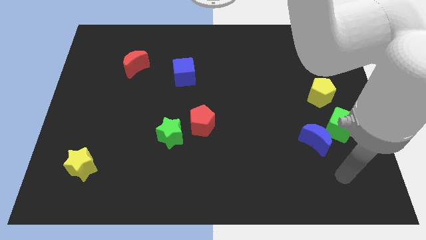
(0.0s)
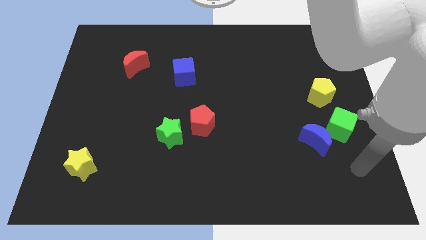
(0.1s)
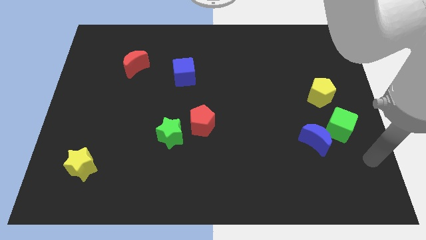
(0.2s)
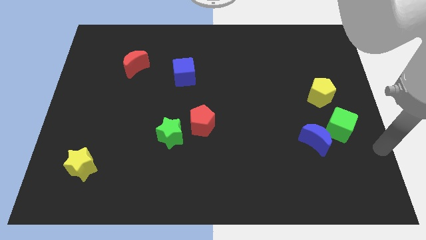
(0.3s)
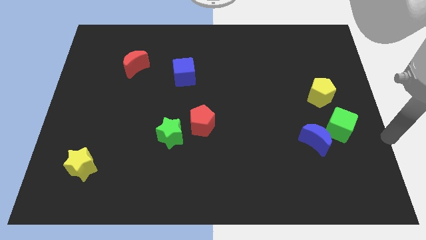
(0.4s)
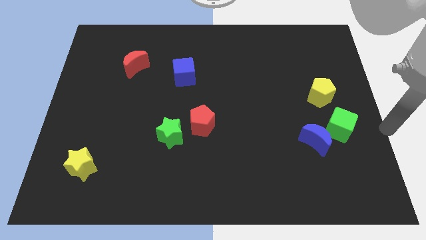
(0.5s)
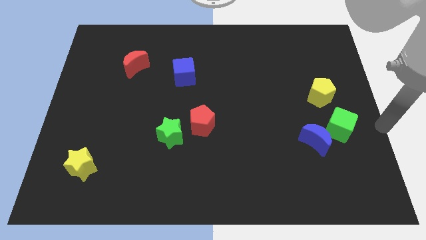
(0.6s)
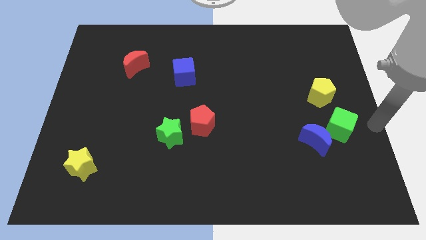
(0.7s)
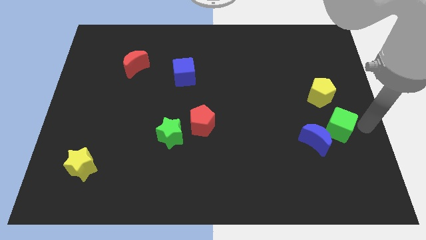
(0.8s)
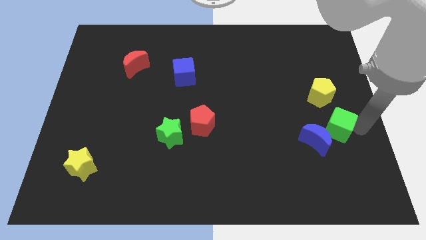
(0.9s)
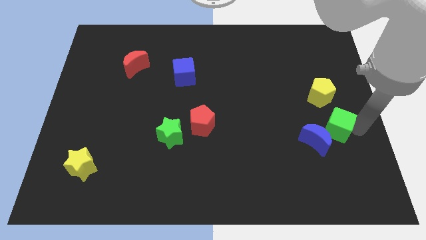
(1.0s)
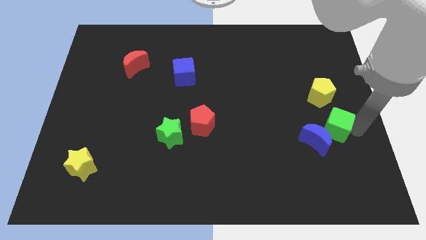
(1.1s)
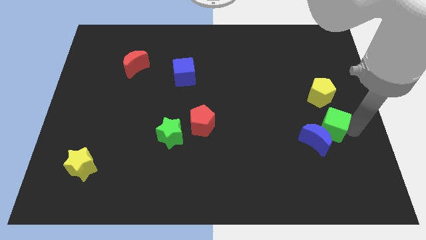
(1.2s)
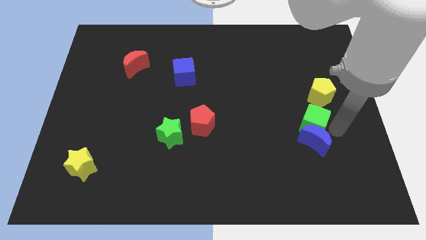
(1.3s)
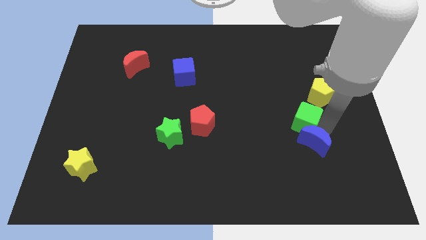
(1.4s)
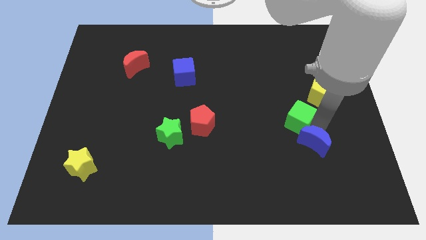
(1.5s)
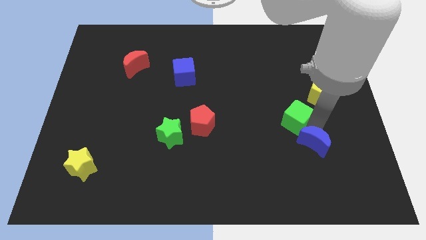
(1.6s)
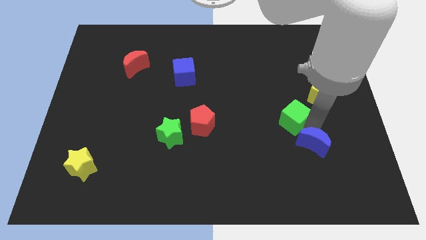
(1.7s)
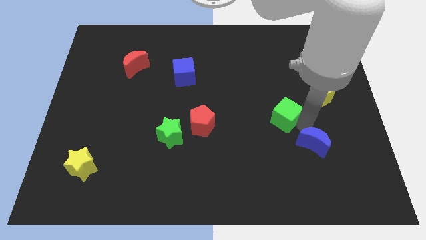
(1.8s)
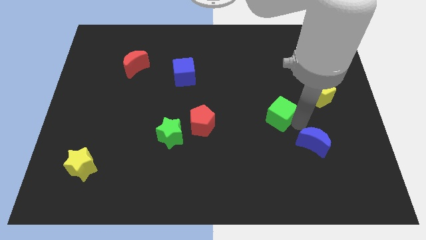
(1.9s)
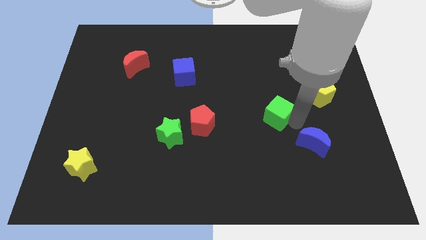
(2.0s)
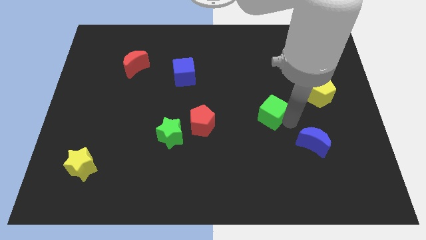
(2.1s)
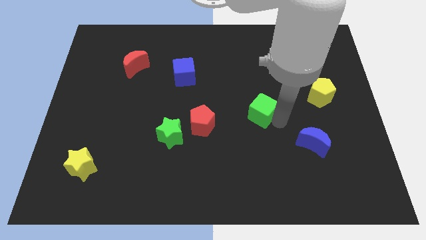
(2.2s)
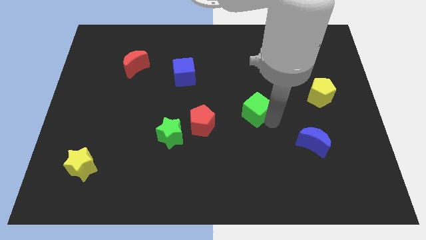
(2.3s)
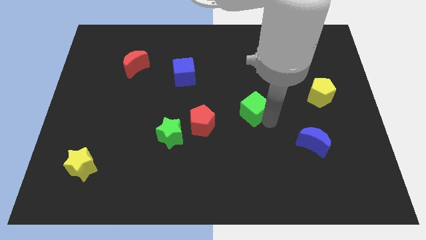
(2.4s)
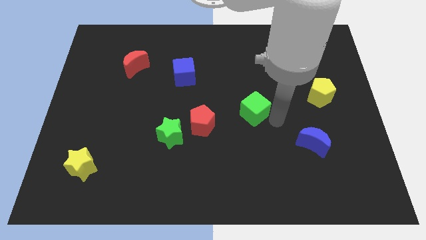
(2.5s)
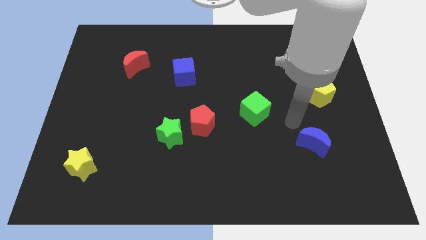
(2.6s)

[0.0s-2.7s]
move green cube towards center

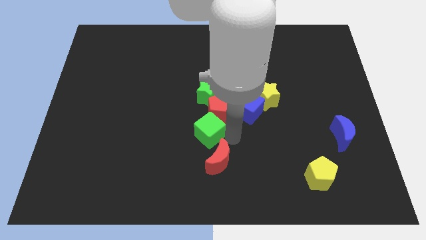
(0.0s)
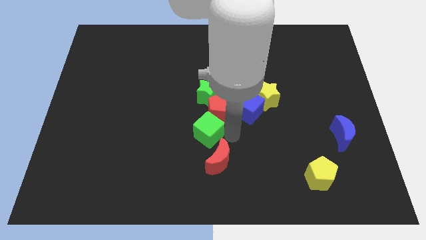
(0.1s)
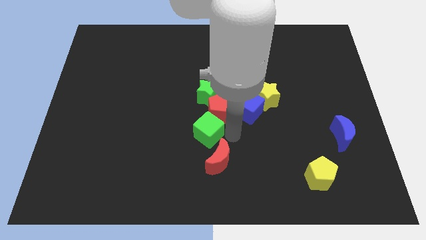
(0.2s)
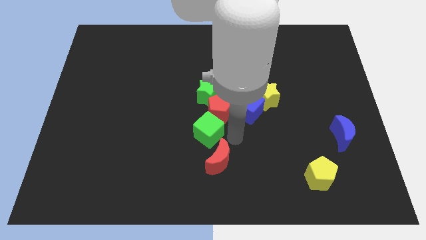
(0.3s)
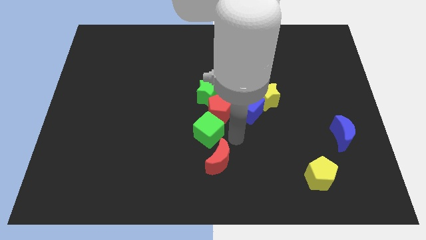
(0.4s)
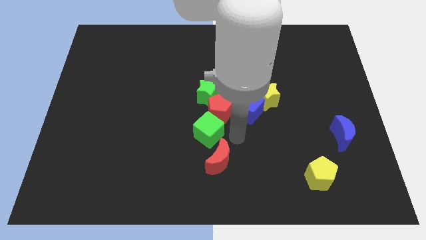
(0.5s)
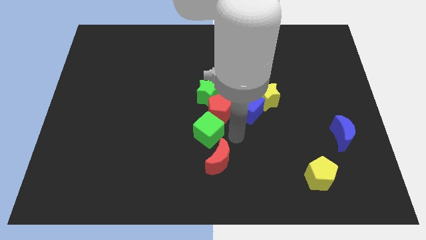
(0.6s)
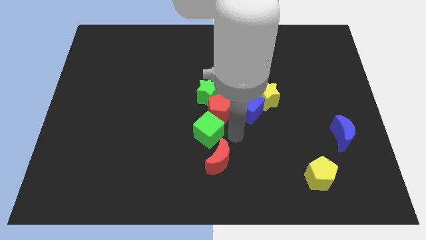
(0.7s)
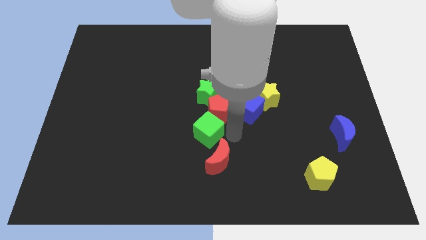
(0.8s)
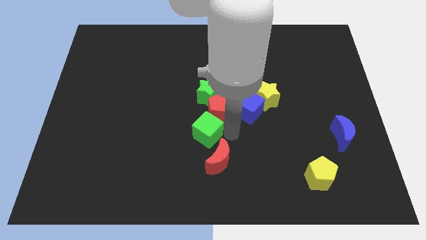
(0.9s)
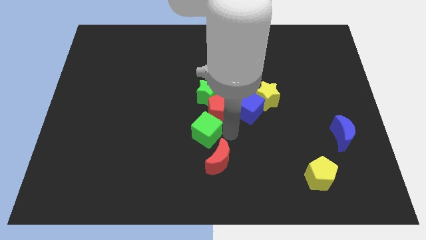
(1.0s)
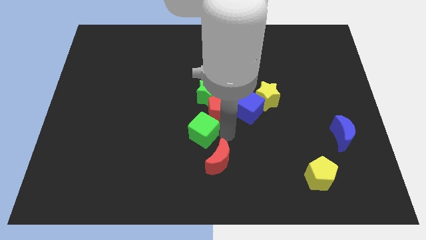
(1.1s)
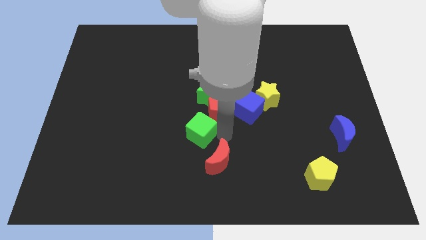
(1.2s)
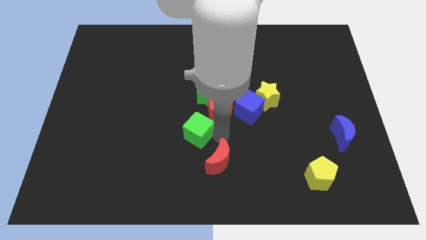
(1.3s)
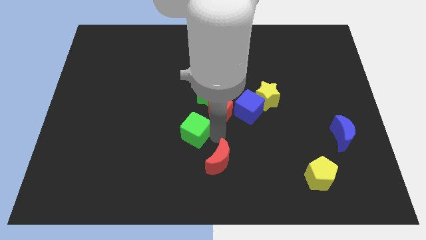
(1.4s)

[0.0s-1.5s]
push the green cube slightly to the left

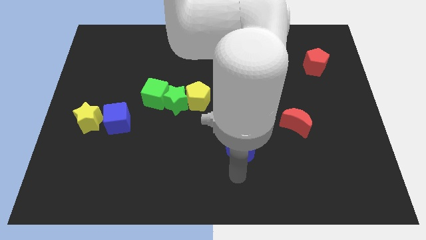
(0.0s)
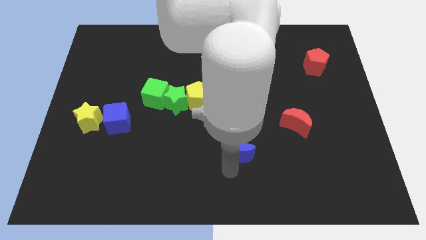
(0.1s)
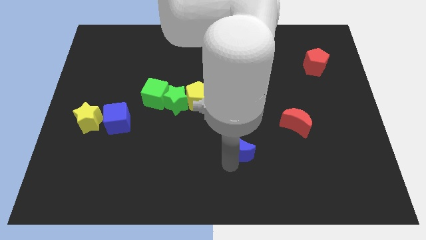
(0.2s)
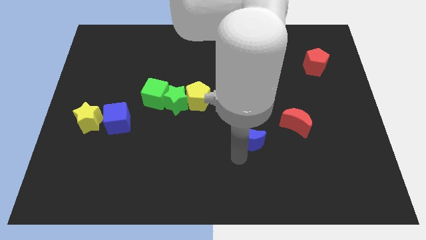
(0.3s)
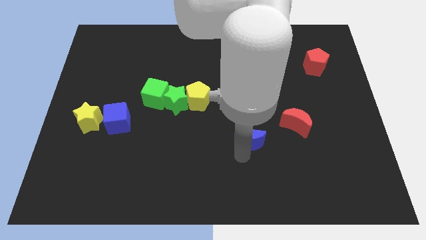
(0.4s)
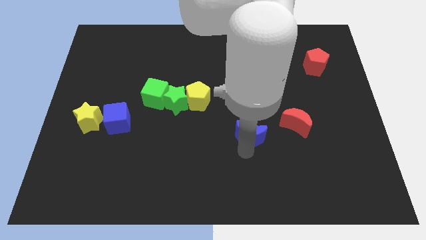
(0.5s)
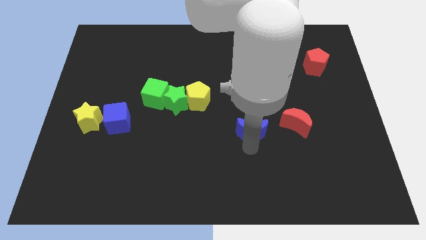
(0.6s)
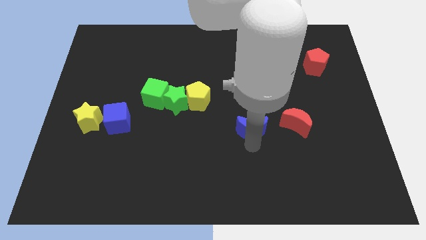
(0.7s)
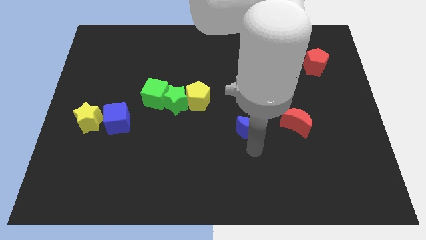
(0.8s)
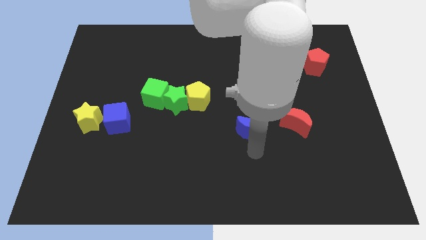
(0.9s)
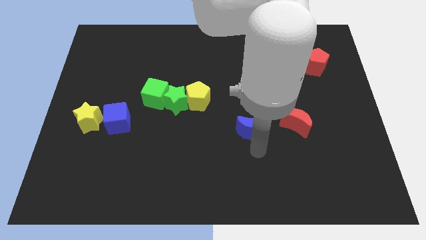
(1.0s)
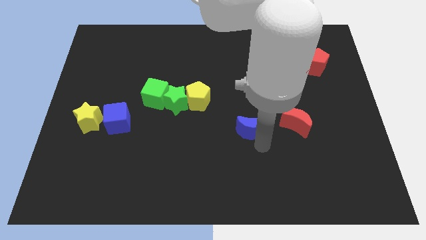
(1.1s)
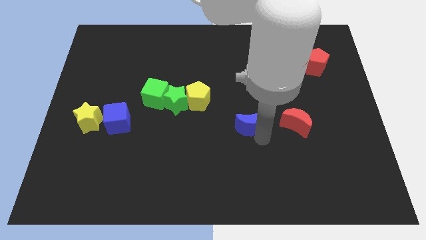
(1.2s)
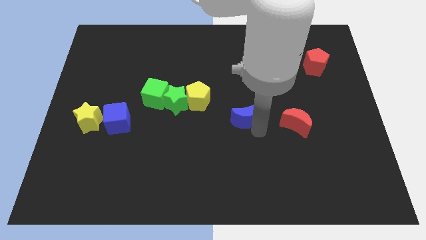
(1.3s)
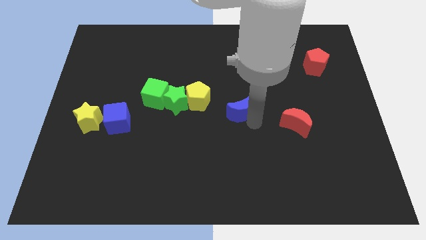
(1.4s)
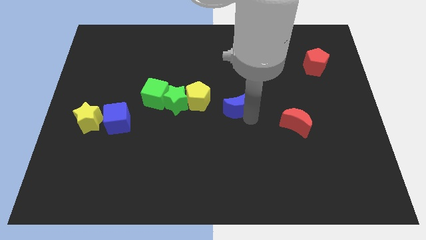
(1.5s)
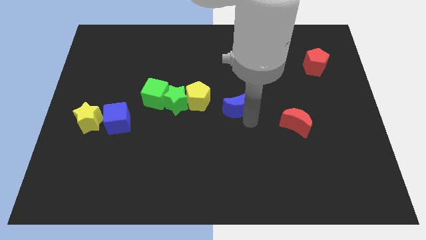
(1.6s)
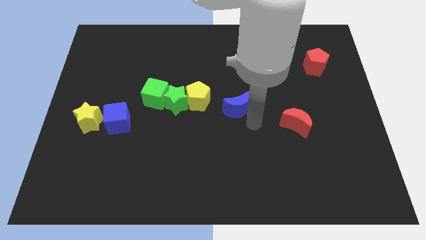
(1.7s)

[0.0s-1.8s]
place the blue crescent at center of the board

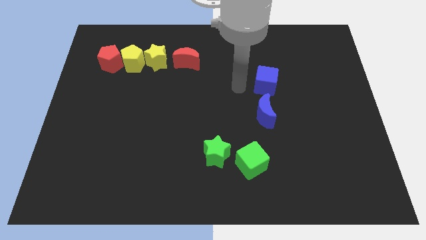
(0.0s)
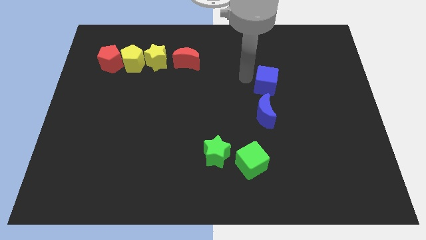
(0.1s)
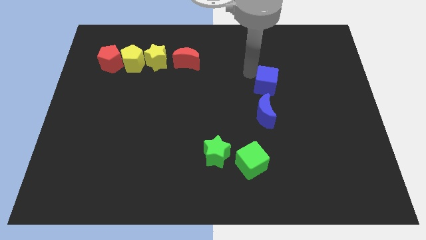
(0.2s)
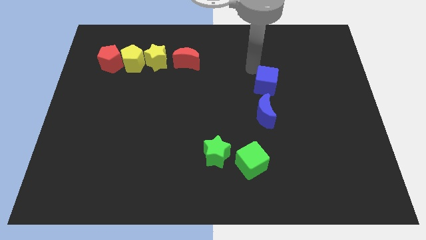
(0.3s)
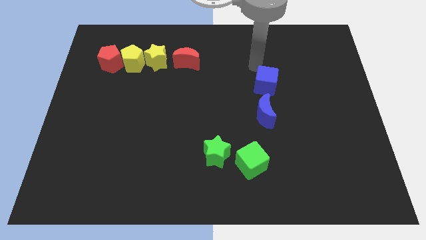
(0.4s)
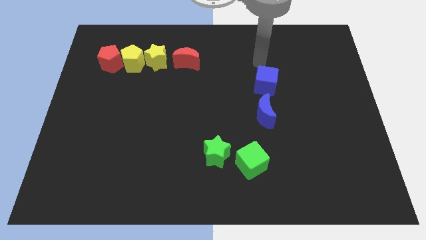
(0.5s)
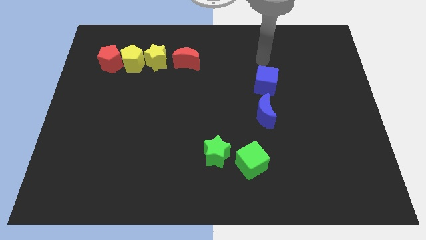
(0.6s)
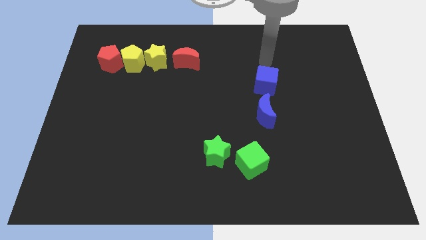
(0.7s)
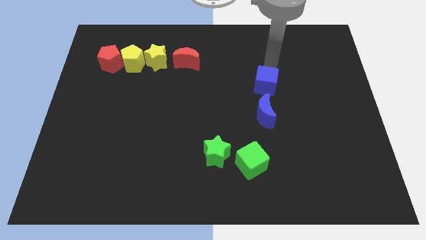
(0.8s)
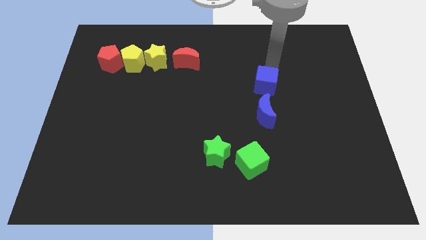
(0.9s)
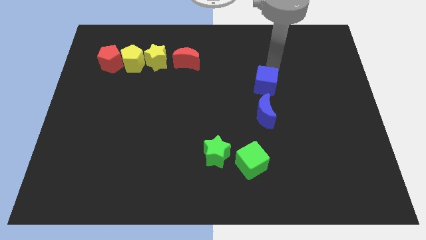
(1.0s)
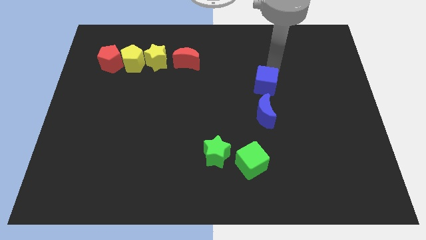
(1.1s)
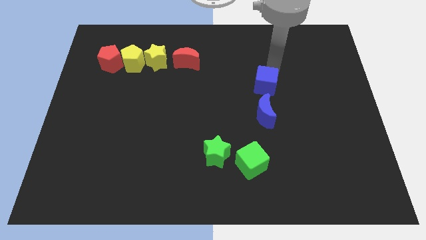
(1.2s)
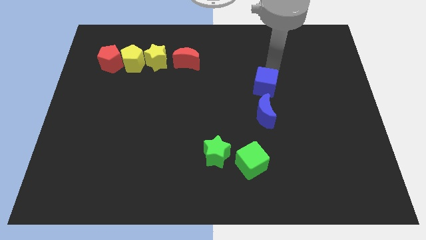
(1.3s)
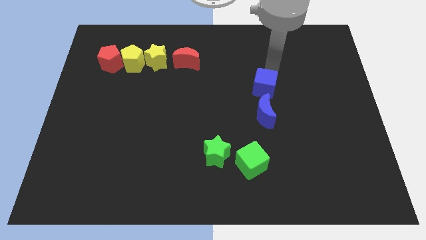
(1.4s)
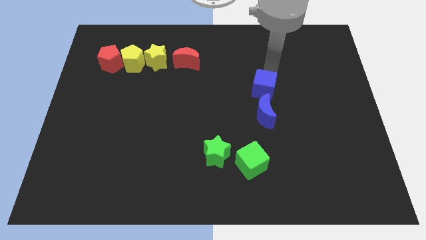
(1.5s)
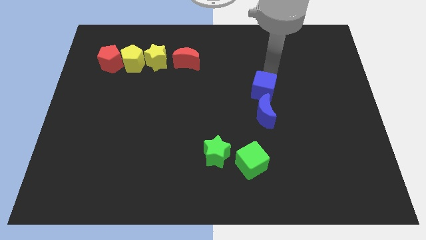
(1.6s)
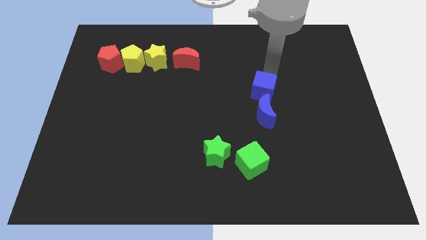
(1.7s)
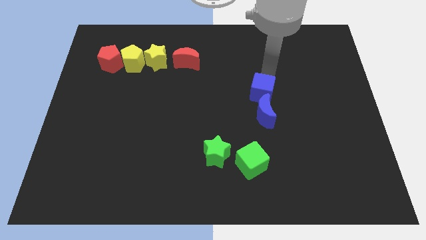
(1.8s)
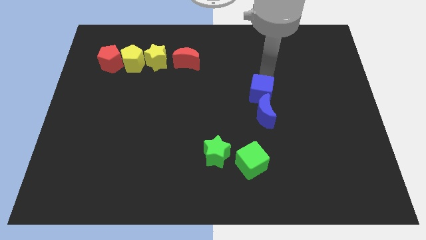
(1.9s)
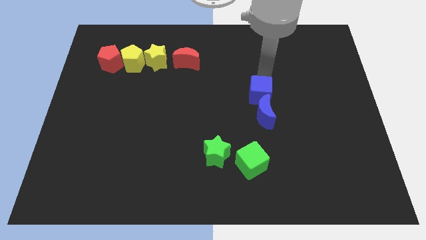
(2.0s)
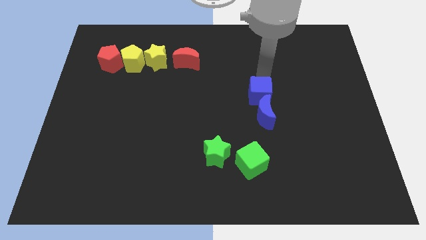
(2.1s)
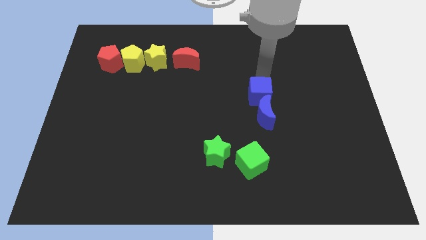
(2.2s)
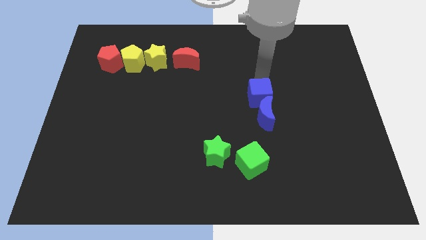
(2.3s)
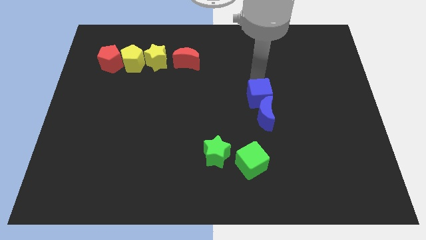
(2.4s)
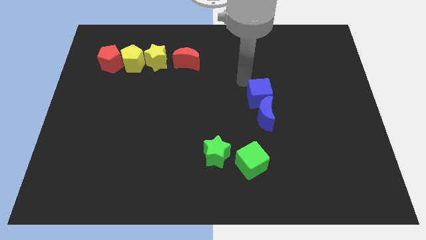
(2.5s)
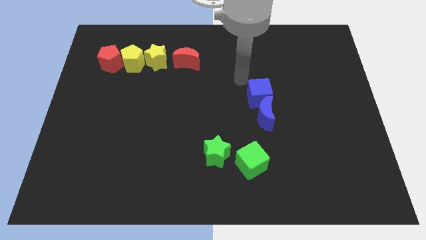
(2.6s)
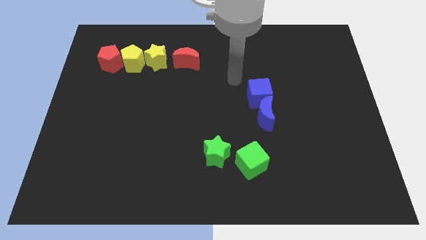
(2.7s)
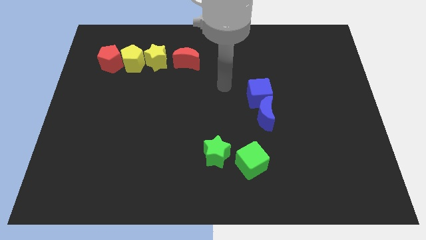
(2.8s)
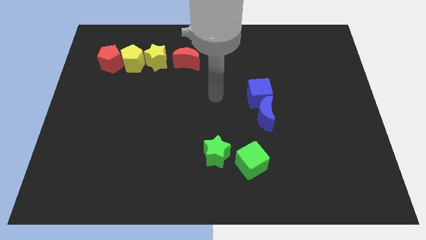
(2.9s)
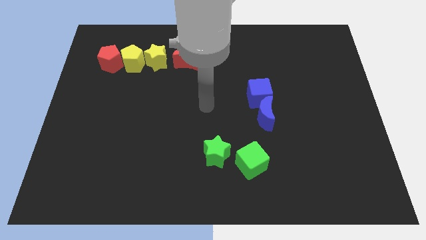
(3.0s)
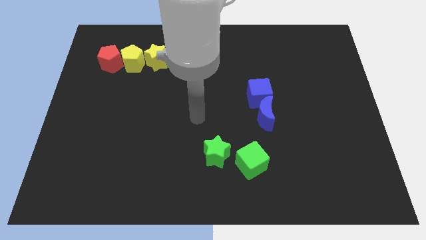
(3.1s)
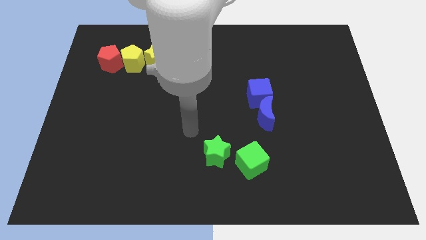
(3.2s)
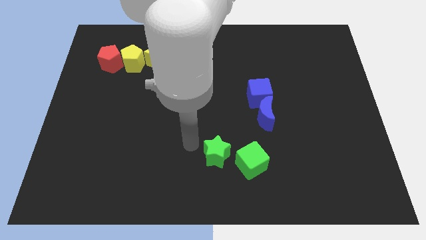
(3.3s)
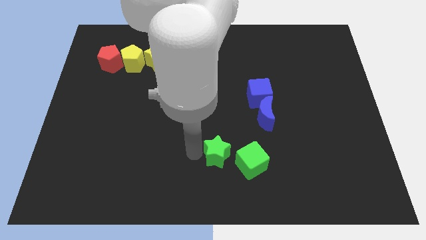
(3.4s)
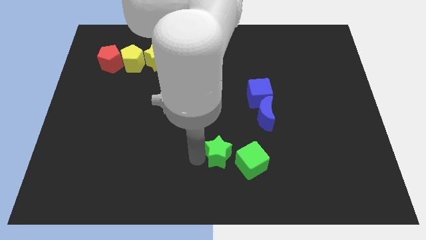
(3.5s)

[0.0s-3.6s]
move blue cube into blue moon
